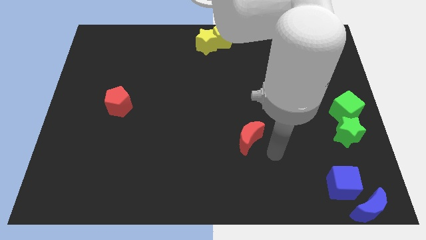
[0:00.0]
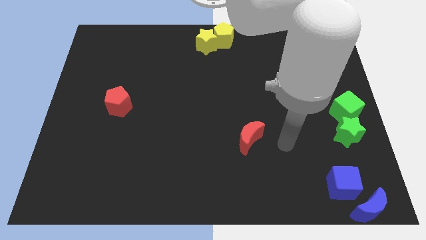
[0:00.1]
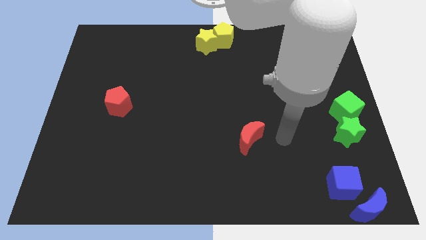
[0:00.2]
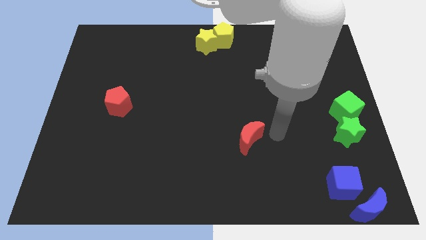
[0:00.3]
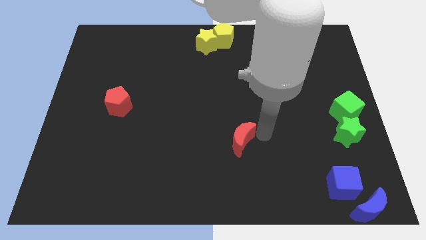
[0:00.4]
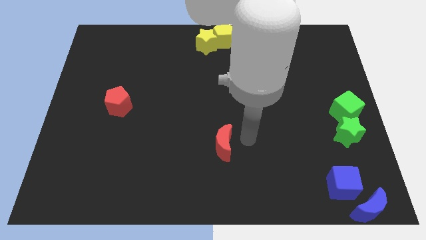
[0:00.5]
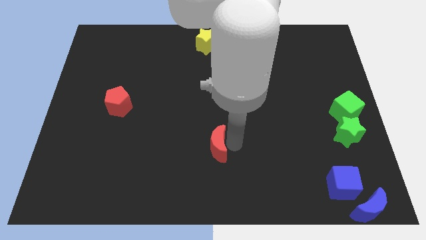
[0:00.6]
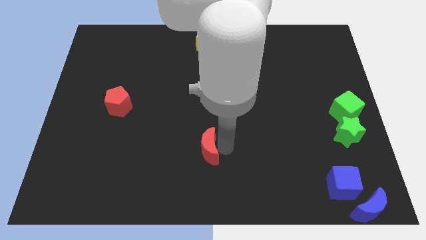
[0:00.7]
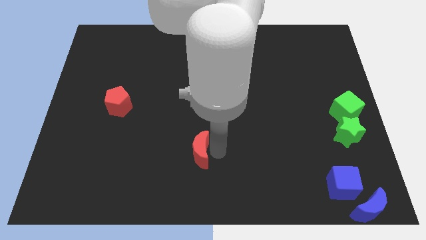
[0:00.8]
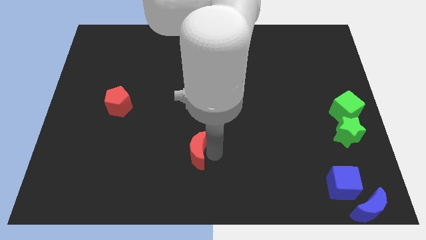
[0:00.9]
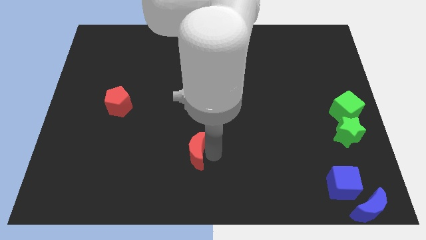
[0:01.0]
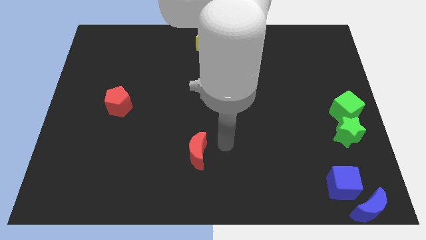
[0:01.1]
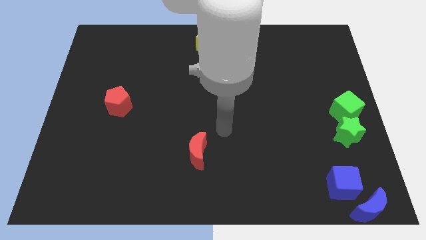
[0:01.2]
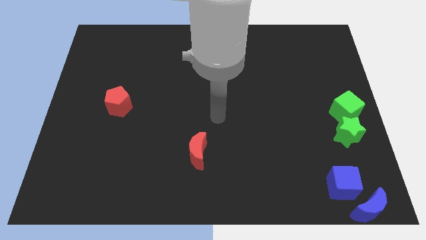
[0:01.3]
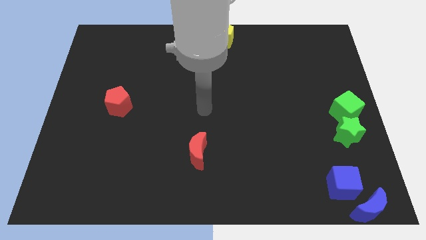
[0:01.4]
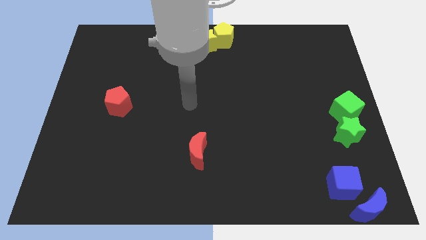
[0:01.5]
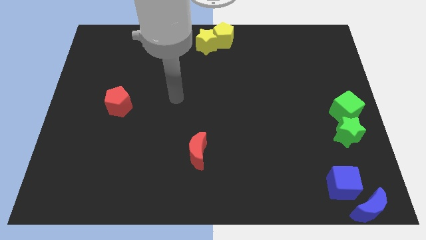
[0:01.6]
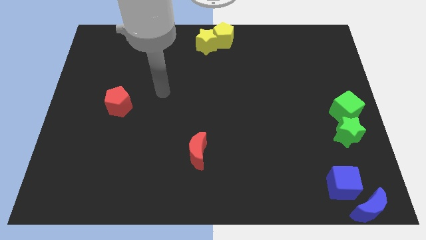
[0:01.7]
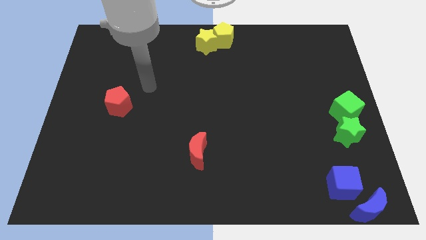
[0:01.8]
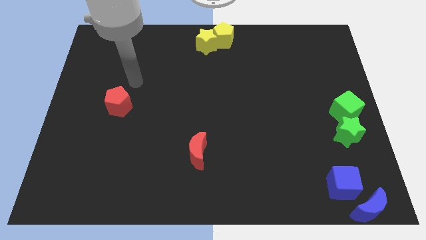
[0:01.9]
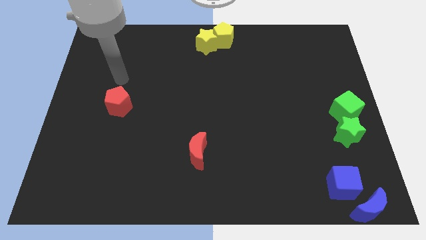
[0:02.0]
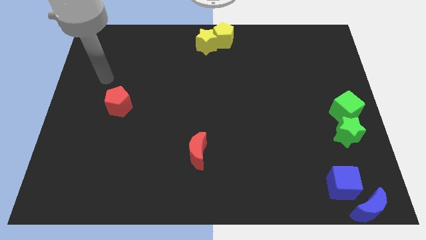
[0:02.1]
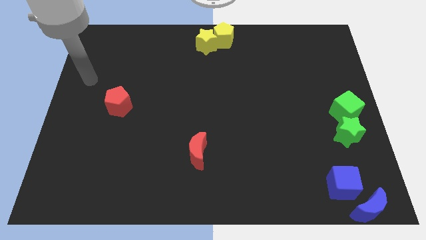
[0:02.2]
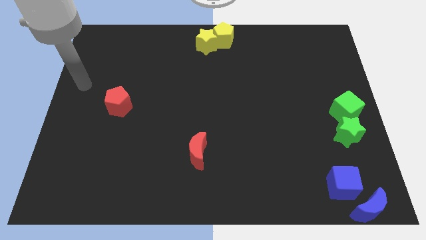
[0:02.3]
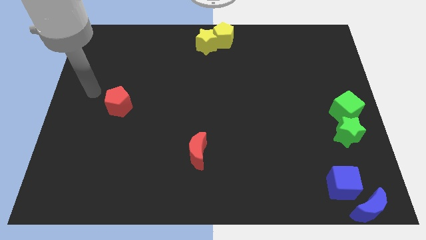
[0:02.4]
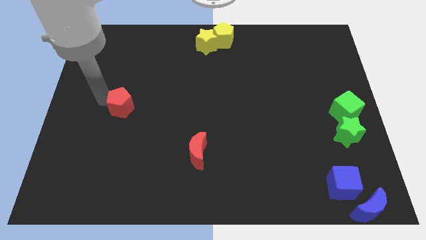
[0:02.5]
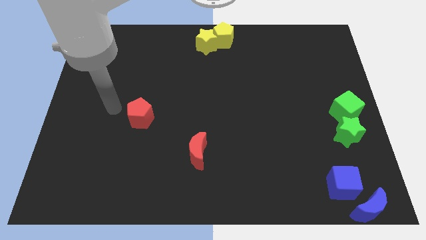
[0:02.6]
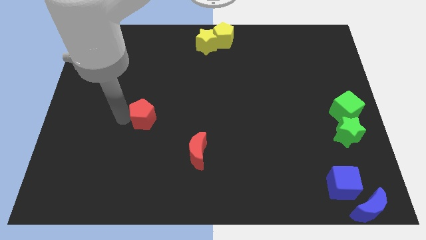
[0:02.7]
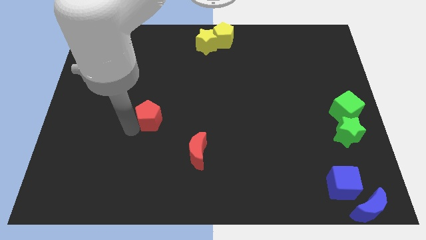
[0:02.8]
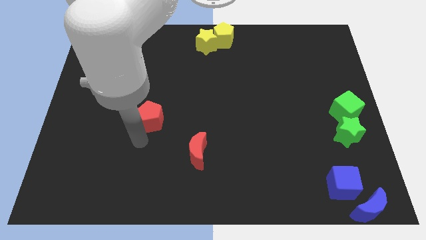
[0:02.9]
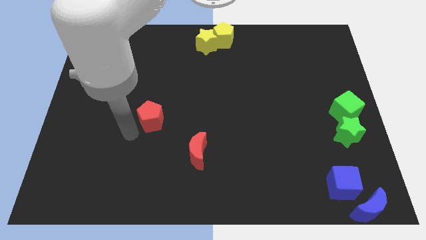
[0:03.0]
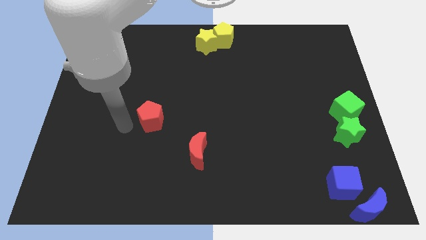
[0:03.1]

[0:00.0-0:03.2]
move red pentagon towards red moon

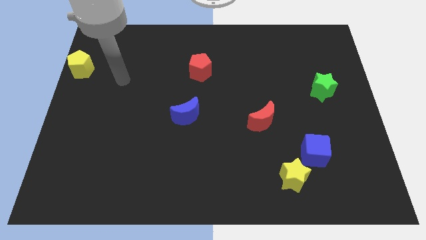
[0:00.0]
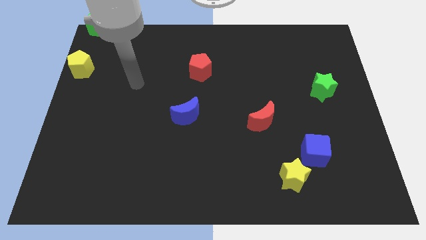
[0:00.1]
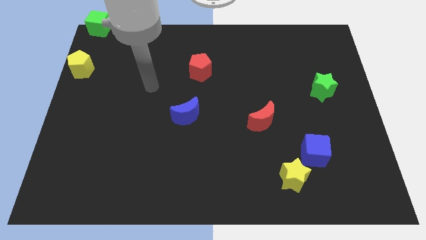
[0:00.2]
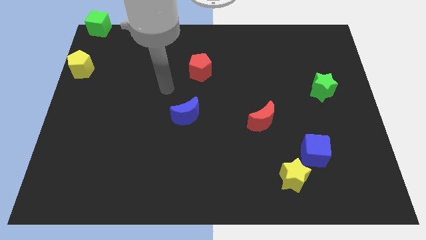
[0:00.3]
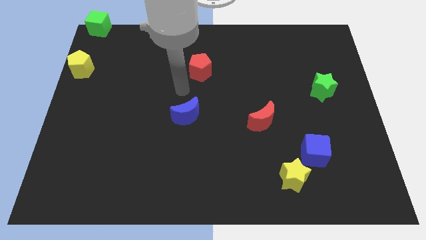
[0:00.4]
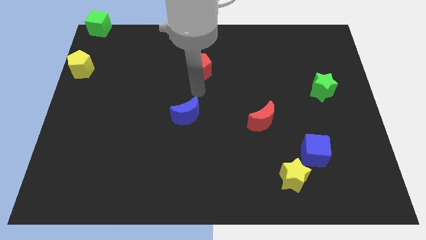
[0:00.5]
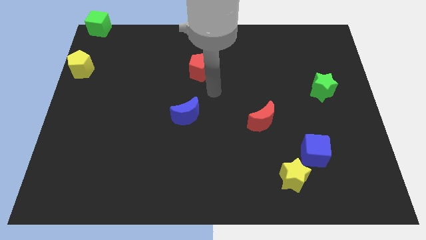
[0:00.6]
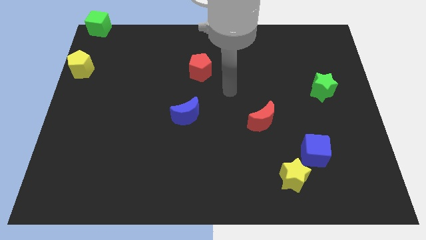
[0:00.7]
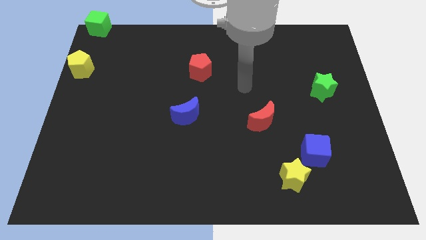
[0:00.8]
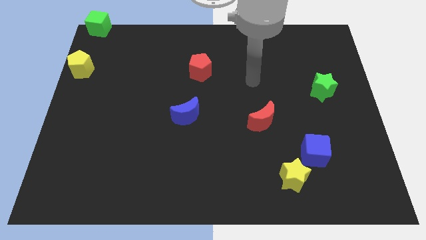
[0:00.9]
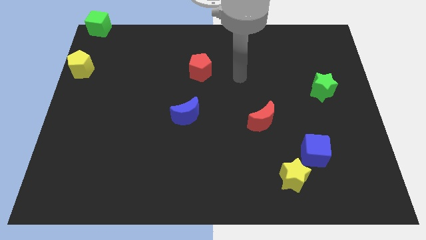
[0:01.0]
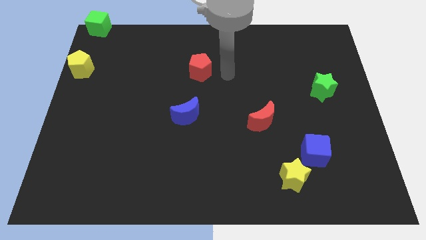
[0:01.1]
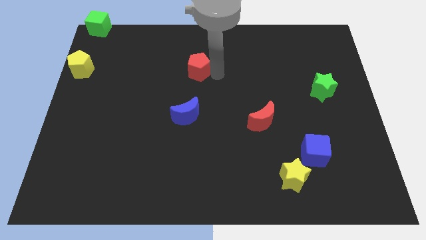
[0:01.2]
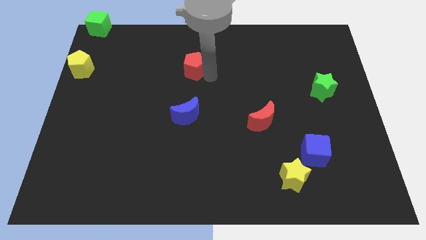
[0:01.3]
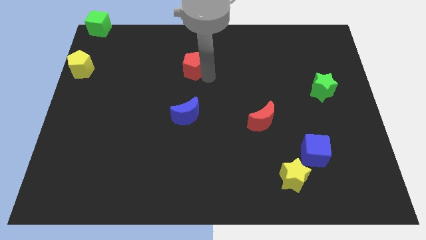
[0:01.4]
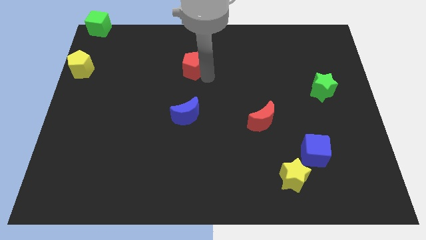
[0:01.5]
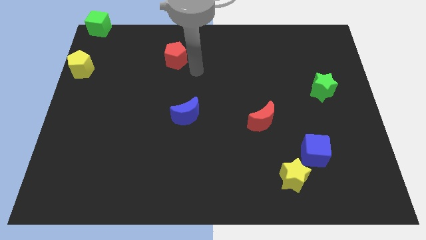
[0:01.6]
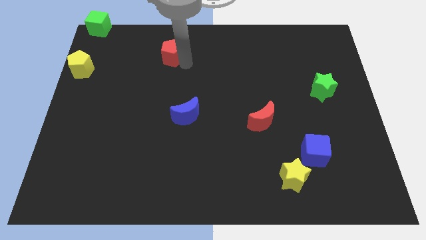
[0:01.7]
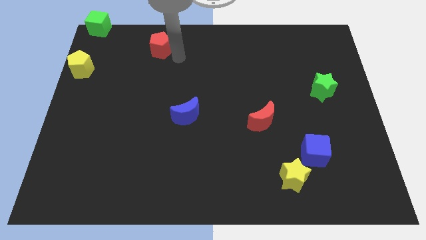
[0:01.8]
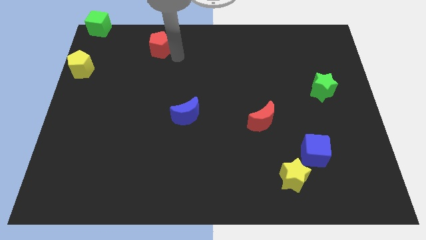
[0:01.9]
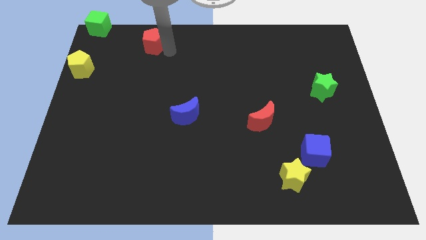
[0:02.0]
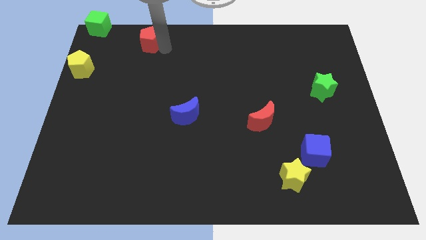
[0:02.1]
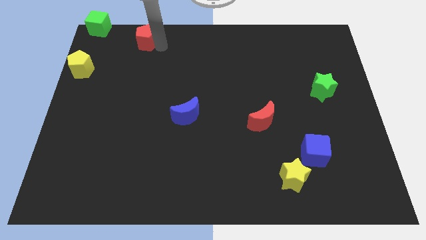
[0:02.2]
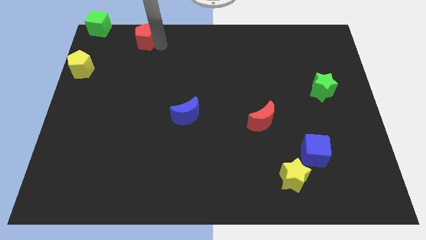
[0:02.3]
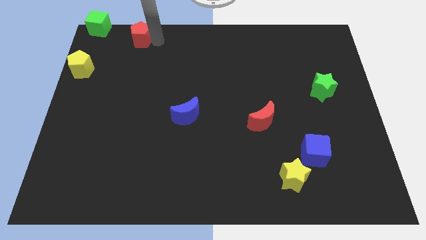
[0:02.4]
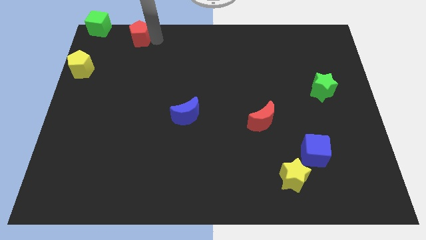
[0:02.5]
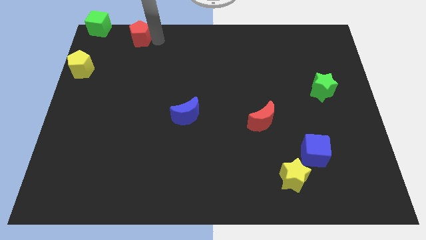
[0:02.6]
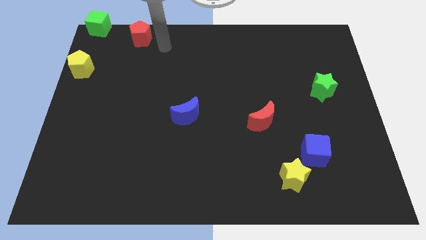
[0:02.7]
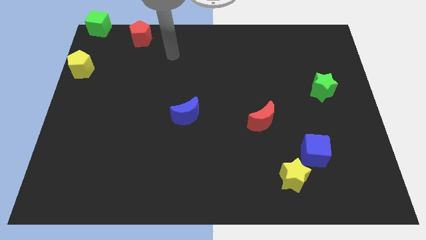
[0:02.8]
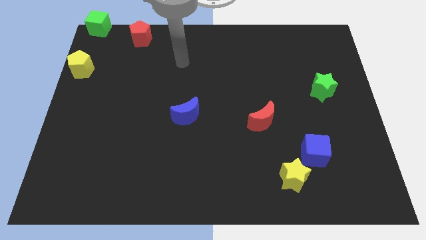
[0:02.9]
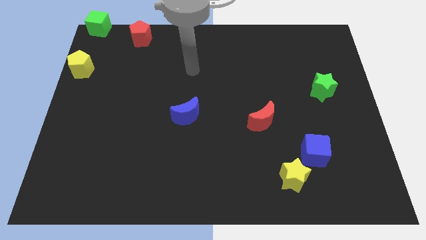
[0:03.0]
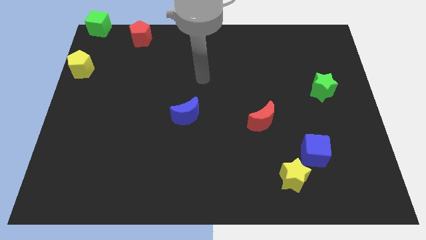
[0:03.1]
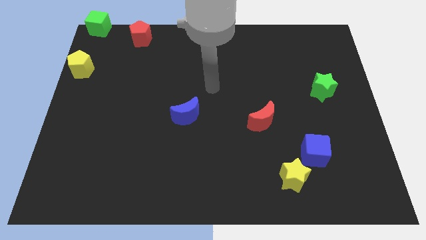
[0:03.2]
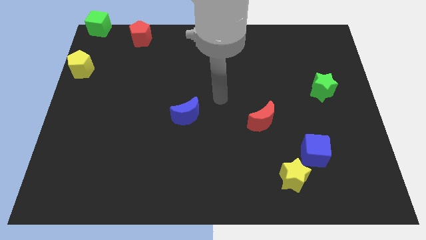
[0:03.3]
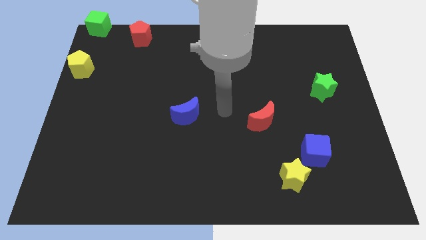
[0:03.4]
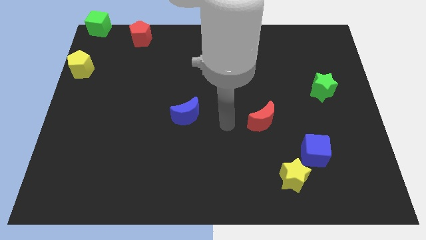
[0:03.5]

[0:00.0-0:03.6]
move the red pentagon to the right side of the green cube

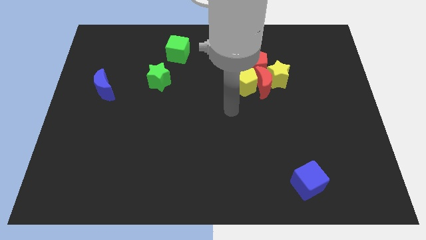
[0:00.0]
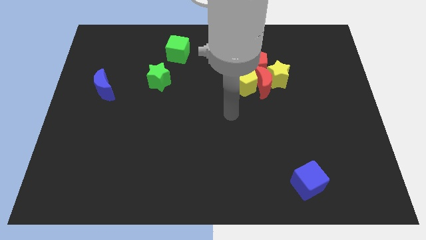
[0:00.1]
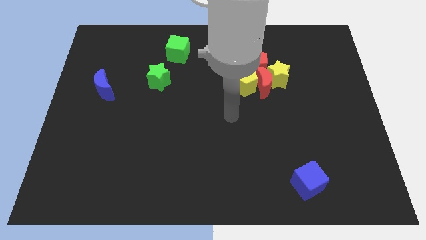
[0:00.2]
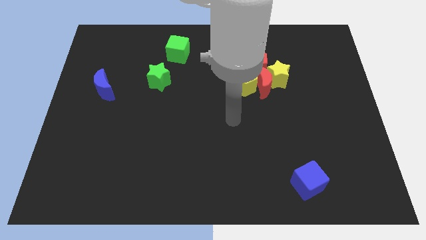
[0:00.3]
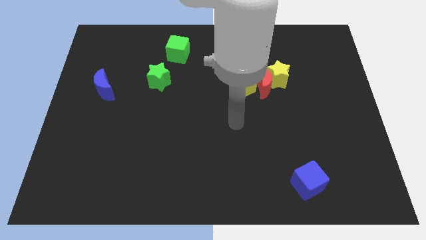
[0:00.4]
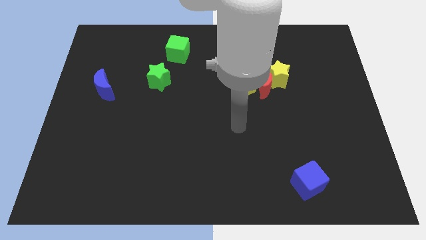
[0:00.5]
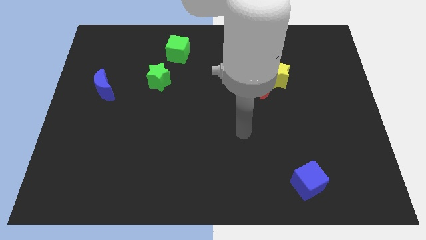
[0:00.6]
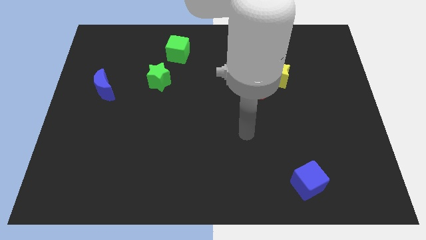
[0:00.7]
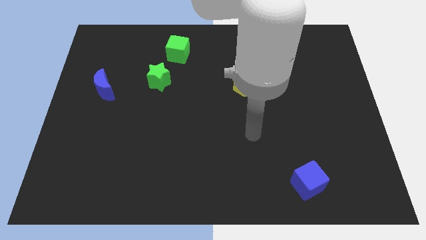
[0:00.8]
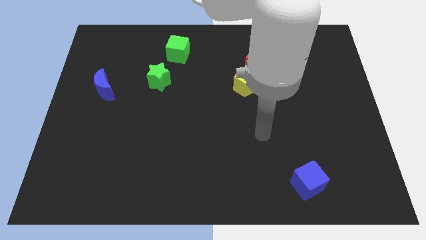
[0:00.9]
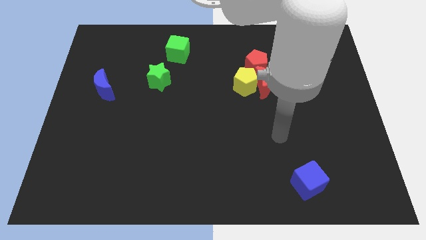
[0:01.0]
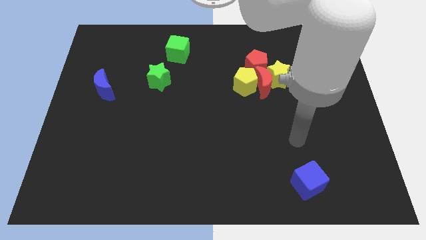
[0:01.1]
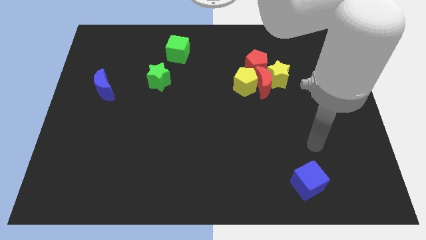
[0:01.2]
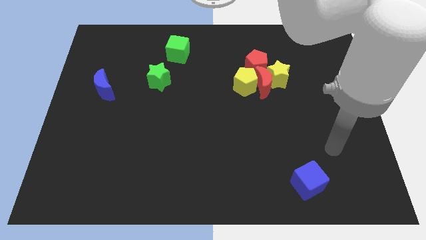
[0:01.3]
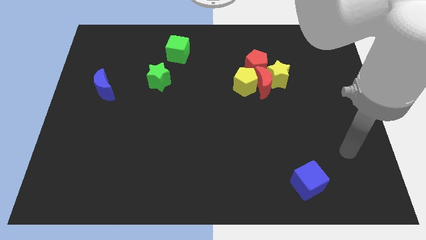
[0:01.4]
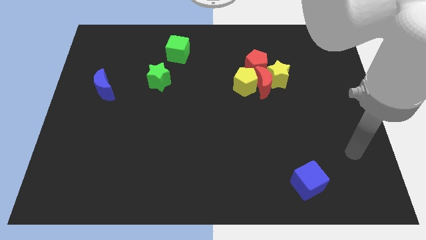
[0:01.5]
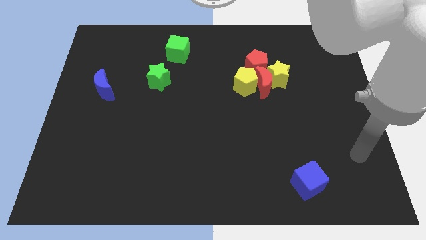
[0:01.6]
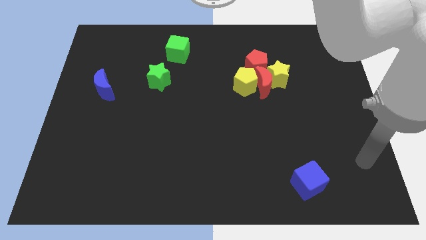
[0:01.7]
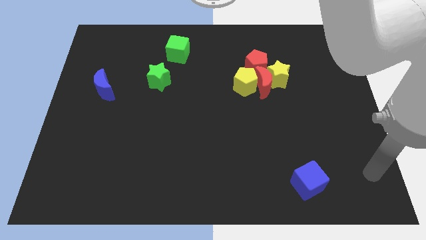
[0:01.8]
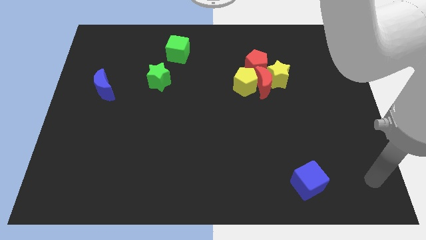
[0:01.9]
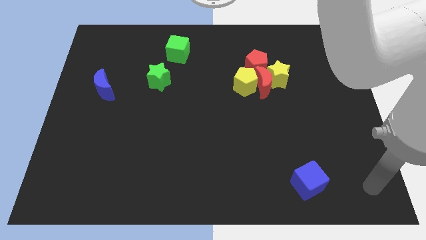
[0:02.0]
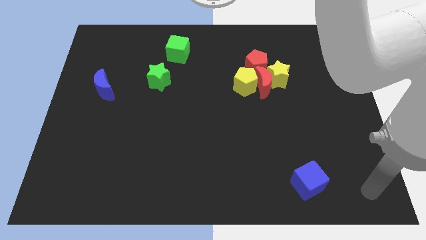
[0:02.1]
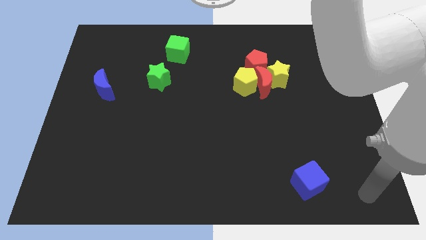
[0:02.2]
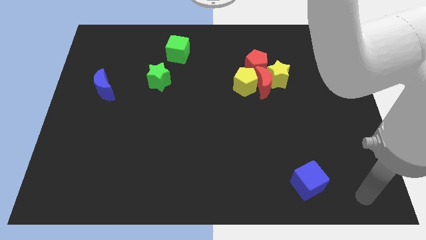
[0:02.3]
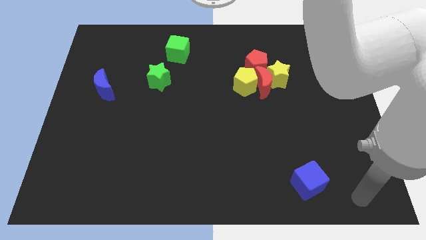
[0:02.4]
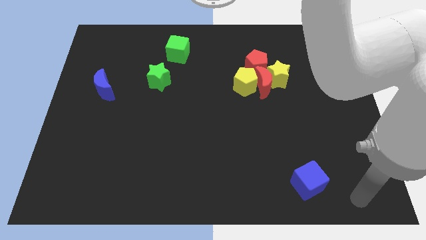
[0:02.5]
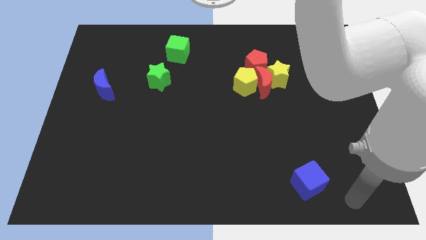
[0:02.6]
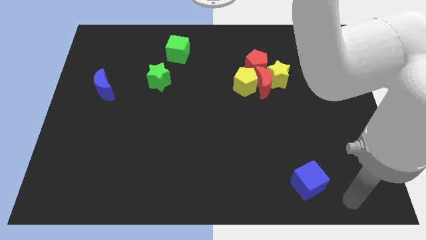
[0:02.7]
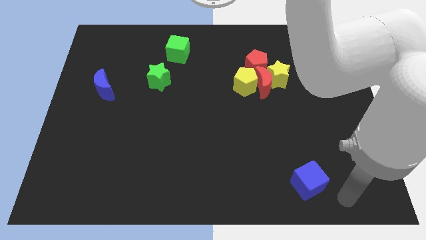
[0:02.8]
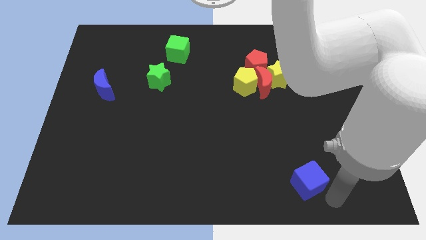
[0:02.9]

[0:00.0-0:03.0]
point the arm at the bottom right of the blue cube
